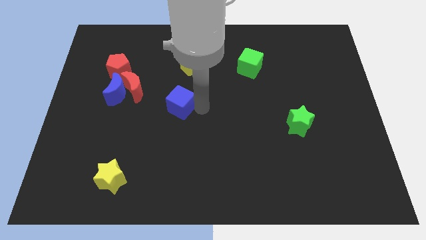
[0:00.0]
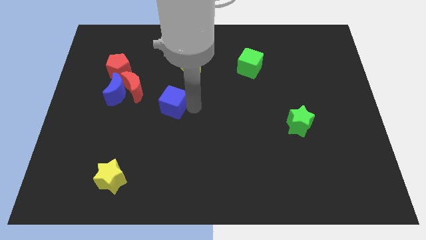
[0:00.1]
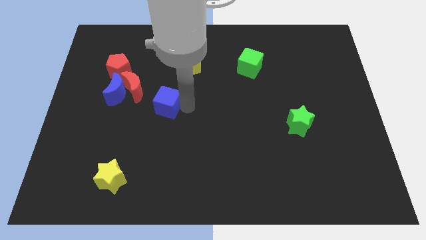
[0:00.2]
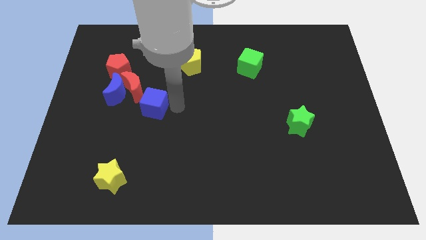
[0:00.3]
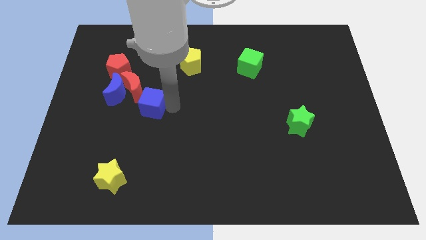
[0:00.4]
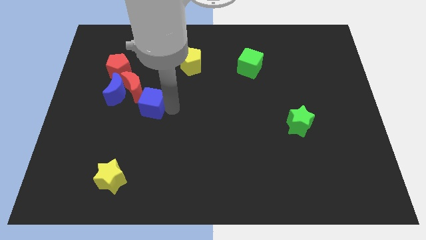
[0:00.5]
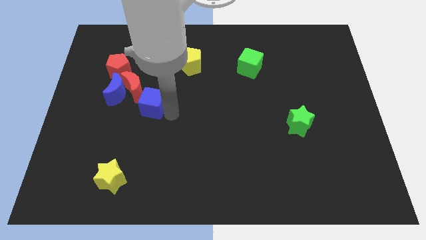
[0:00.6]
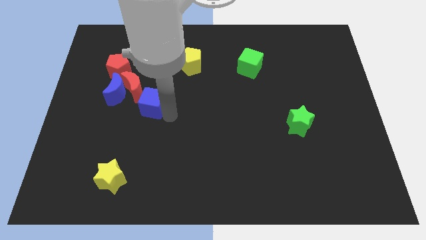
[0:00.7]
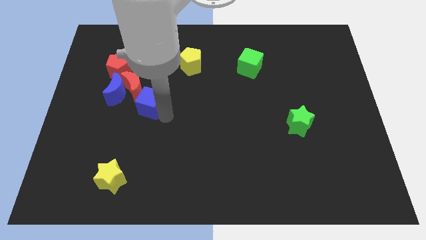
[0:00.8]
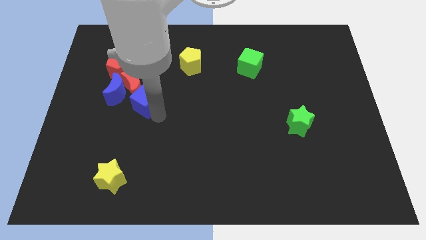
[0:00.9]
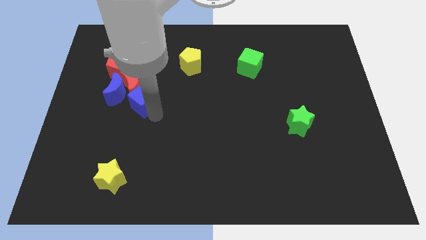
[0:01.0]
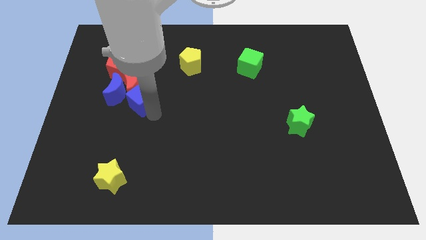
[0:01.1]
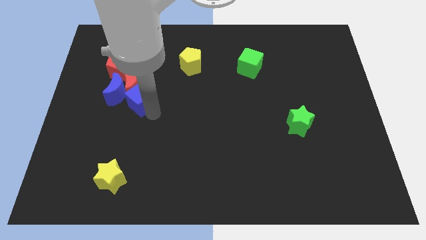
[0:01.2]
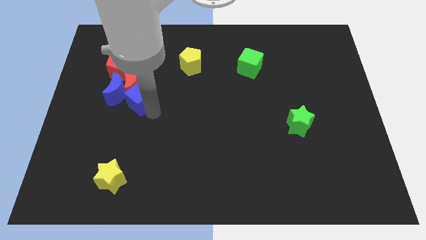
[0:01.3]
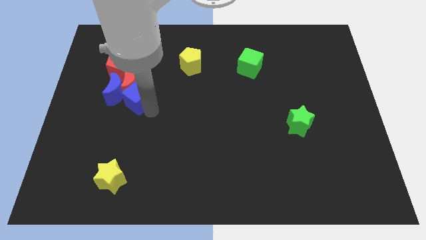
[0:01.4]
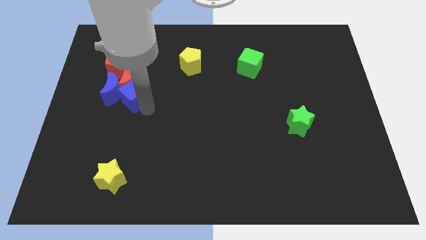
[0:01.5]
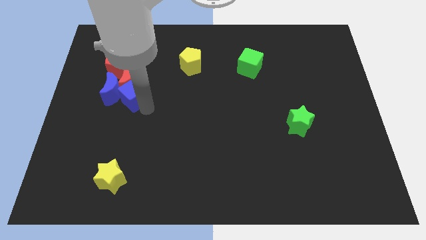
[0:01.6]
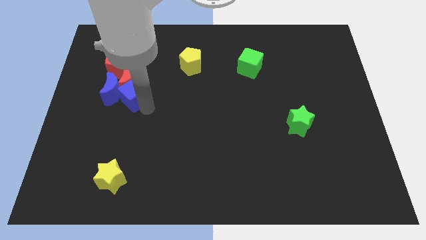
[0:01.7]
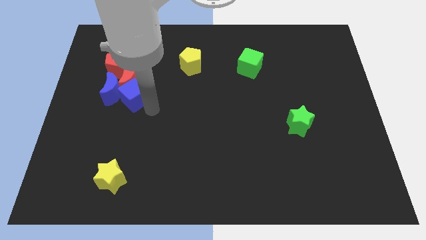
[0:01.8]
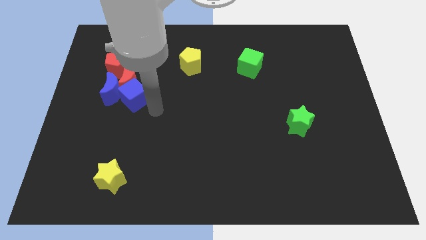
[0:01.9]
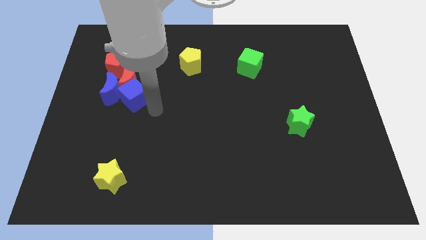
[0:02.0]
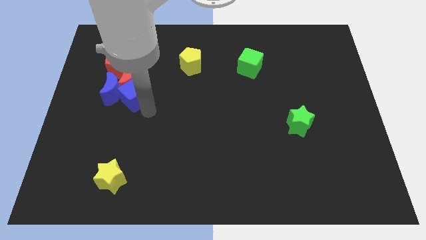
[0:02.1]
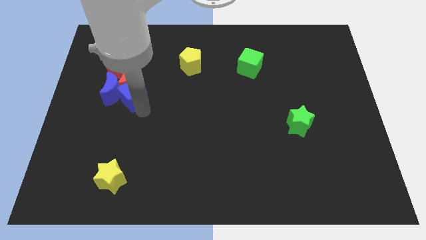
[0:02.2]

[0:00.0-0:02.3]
push the blue cube in to the red crescent

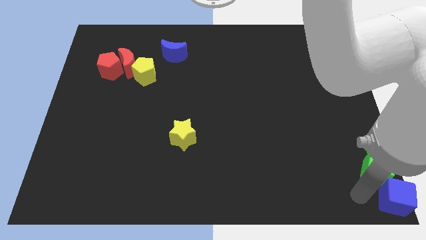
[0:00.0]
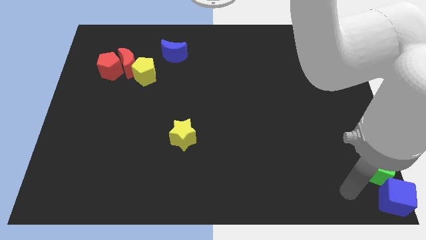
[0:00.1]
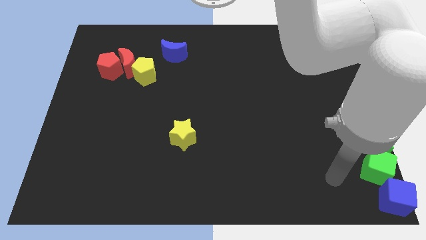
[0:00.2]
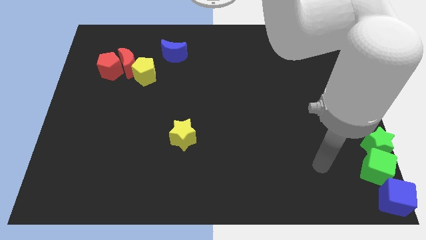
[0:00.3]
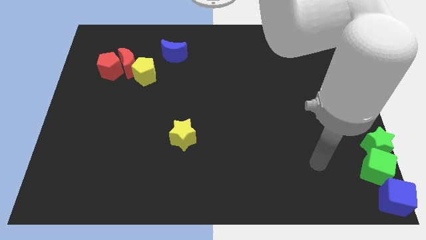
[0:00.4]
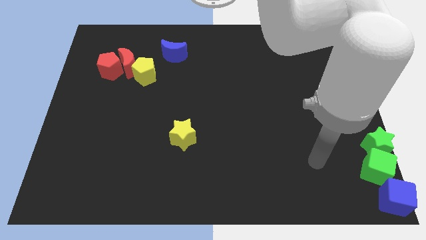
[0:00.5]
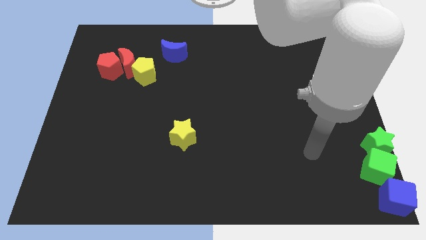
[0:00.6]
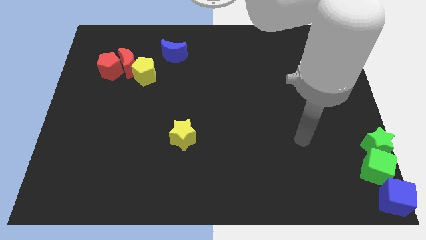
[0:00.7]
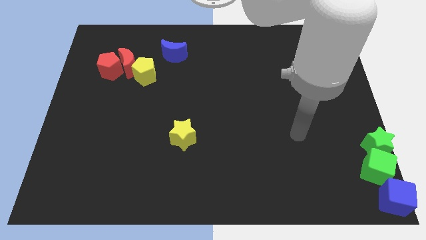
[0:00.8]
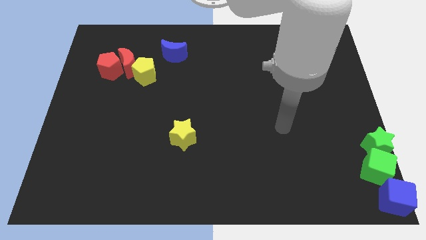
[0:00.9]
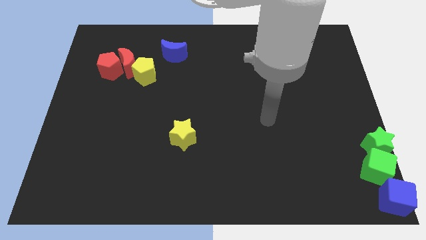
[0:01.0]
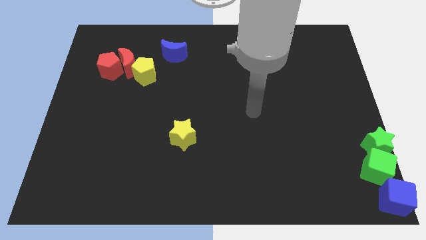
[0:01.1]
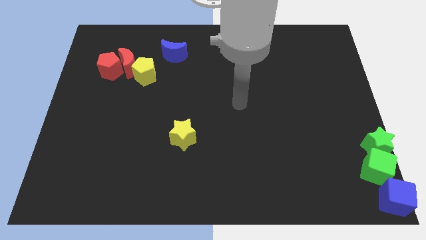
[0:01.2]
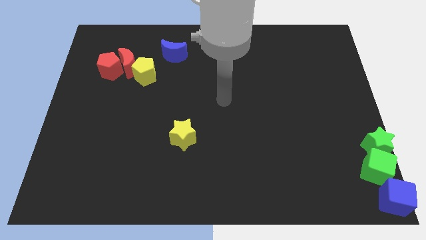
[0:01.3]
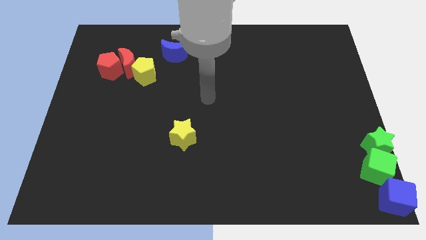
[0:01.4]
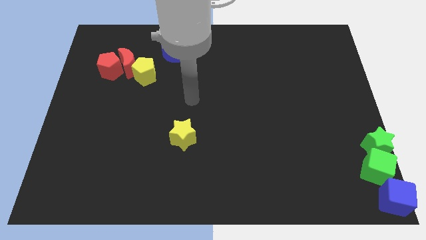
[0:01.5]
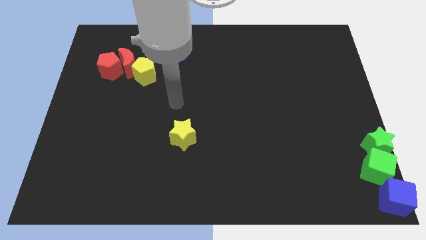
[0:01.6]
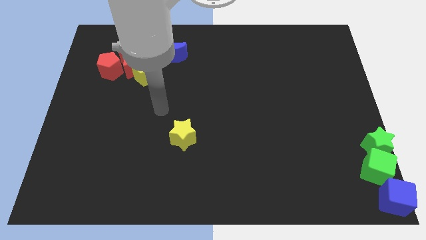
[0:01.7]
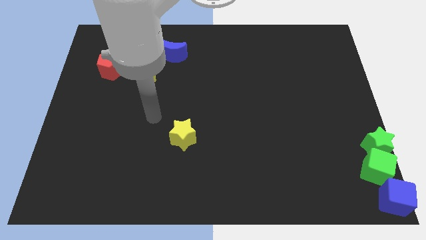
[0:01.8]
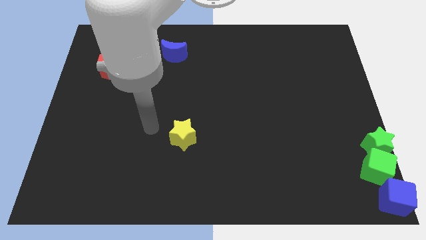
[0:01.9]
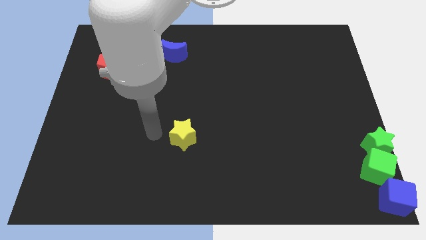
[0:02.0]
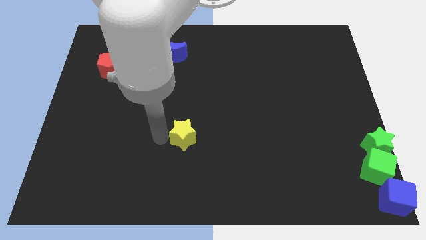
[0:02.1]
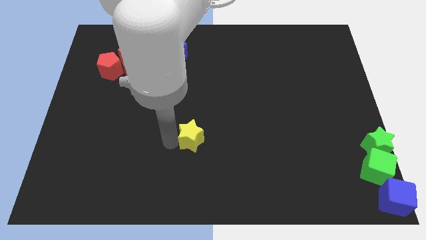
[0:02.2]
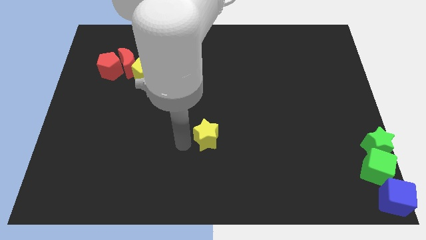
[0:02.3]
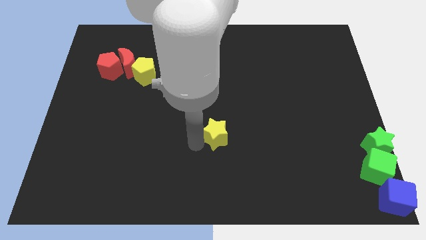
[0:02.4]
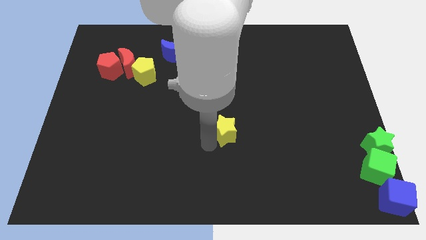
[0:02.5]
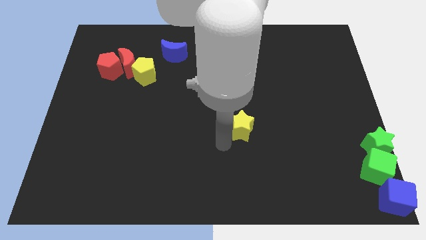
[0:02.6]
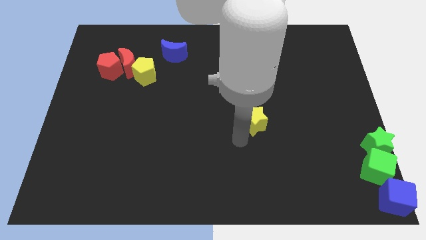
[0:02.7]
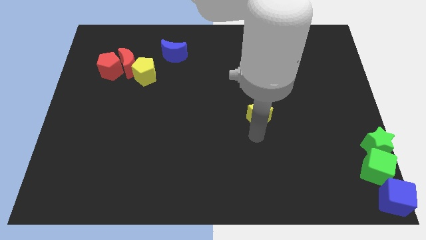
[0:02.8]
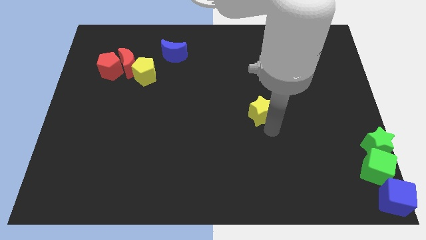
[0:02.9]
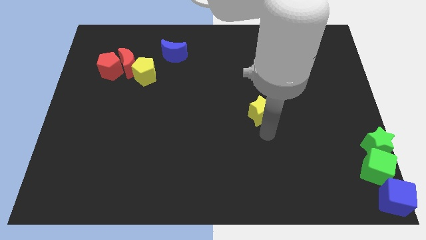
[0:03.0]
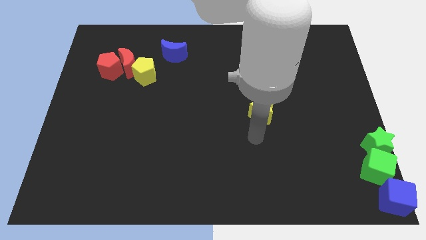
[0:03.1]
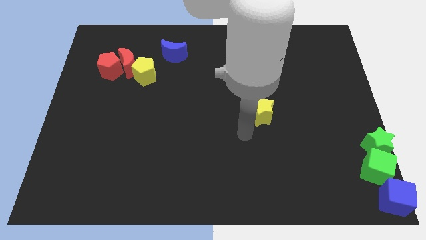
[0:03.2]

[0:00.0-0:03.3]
move the yellow star slightly towards the top of the board

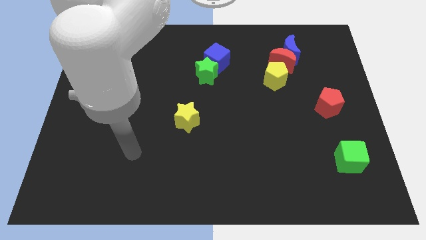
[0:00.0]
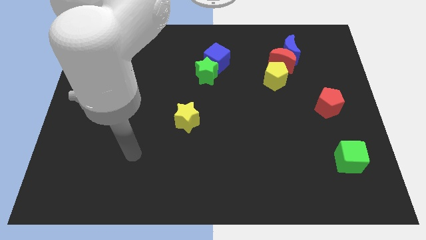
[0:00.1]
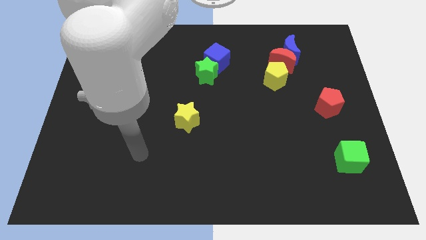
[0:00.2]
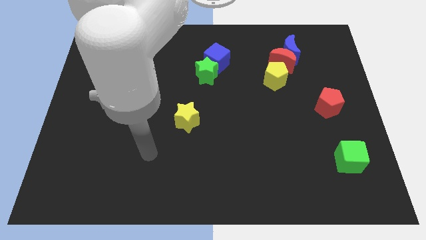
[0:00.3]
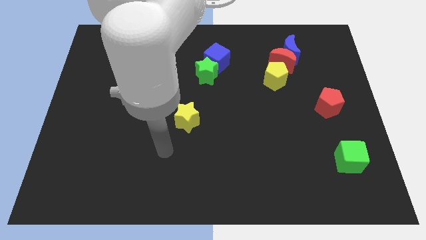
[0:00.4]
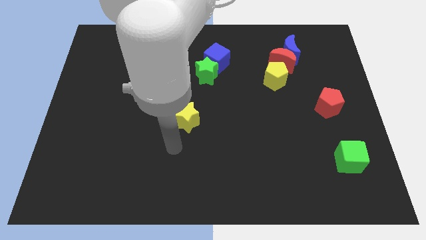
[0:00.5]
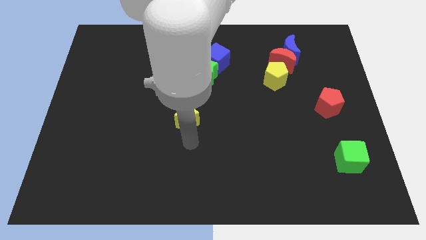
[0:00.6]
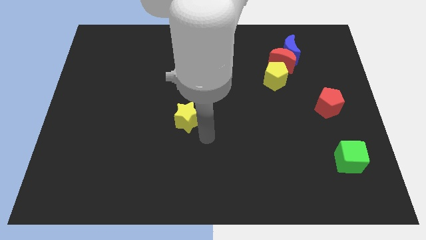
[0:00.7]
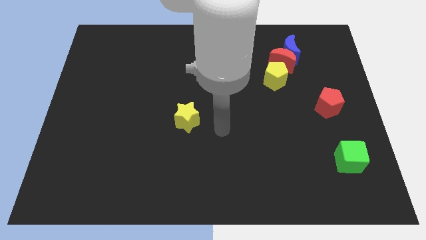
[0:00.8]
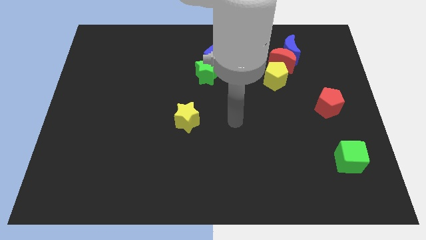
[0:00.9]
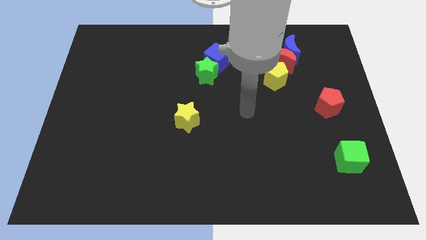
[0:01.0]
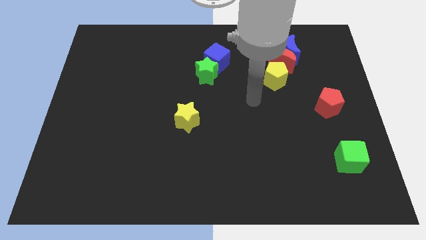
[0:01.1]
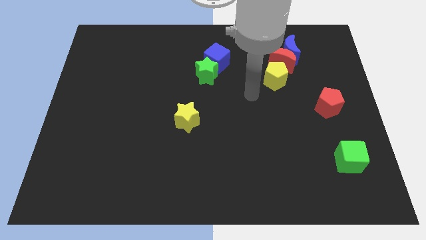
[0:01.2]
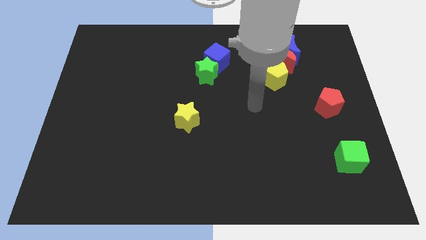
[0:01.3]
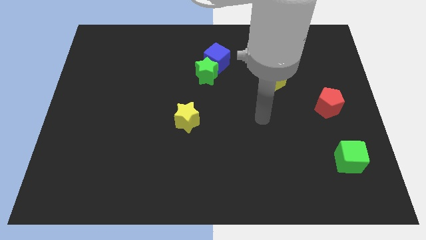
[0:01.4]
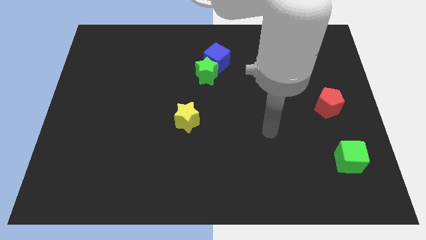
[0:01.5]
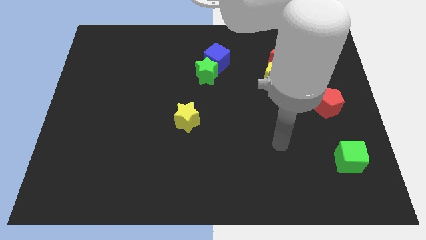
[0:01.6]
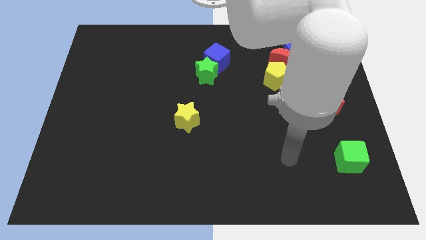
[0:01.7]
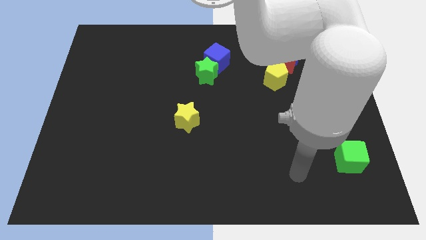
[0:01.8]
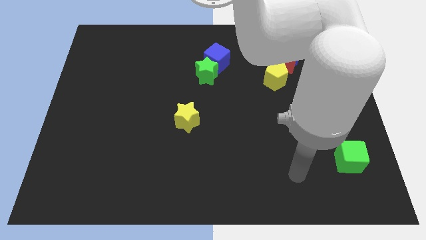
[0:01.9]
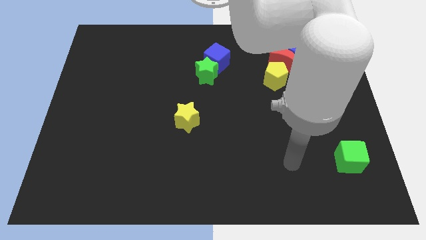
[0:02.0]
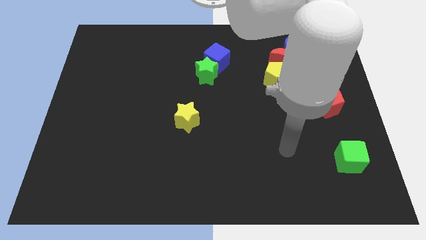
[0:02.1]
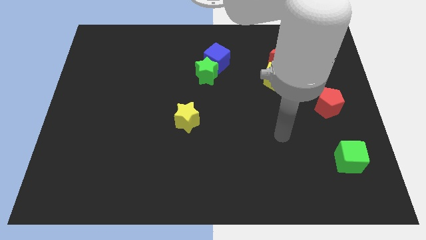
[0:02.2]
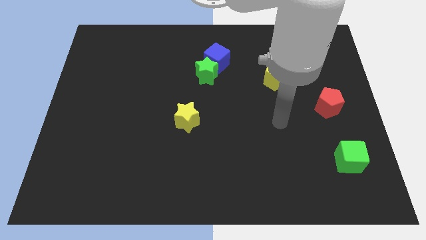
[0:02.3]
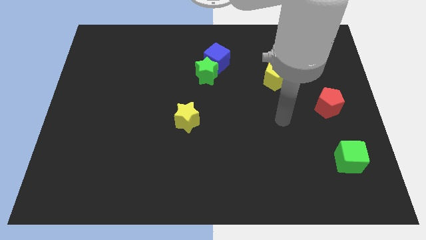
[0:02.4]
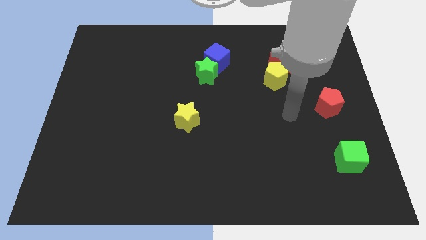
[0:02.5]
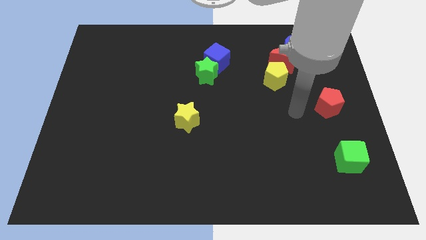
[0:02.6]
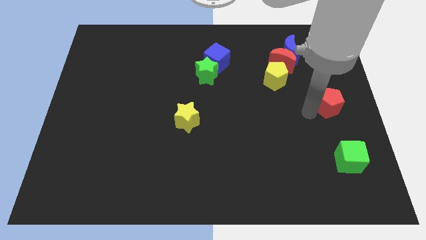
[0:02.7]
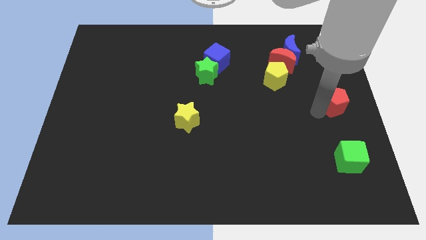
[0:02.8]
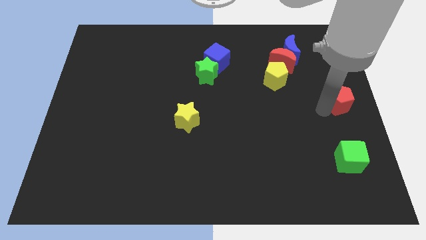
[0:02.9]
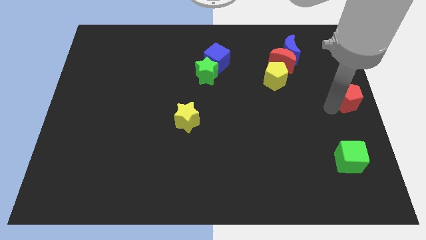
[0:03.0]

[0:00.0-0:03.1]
move the red pentagon to the middle right of the board

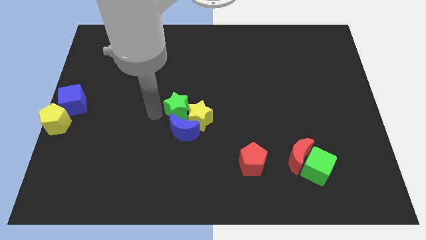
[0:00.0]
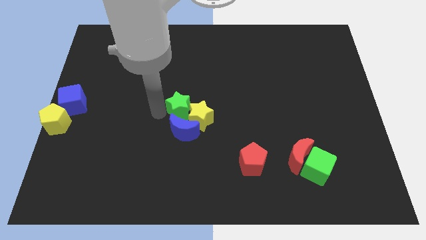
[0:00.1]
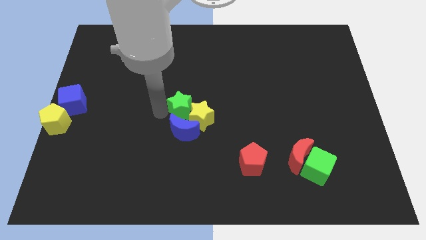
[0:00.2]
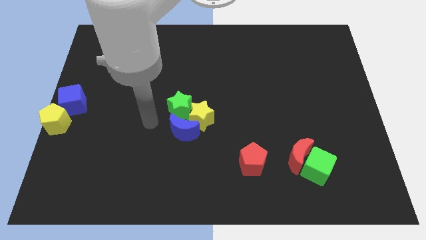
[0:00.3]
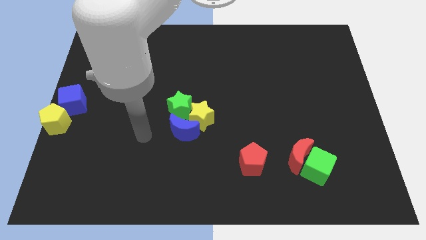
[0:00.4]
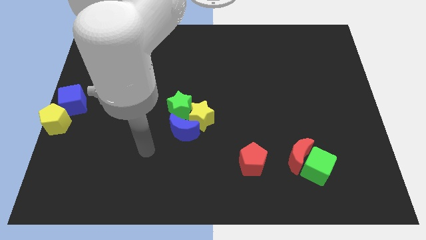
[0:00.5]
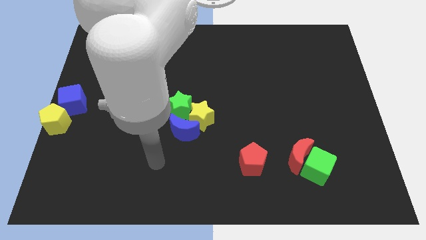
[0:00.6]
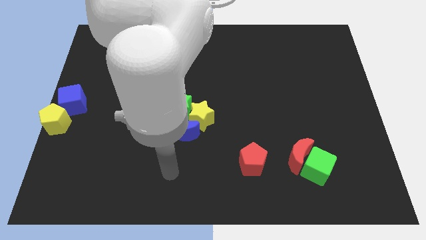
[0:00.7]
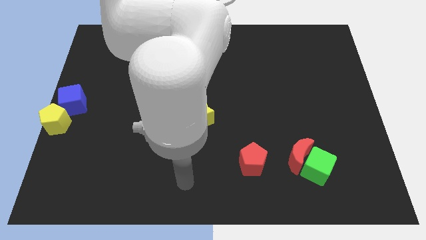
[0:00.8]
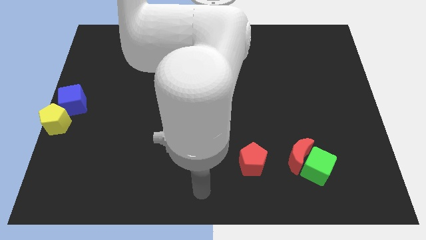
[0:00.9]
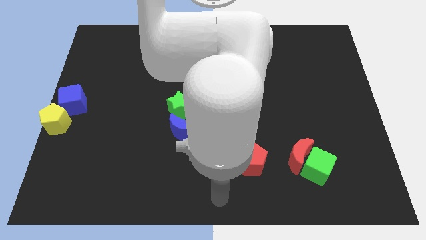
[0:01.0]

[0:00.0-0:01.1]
move your arm away from the green star
